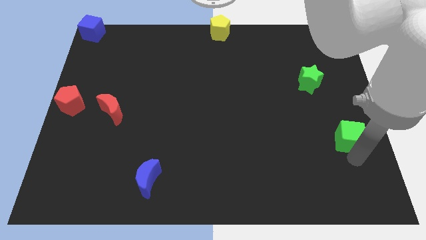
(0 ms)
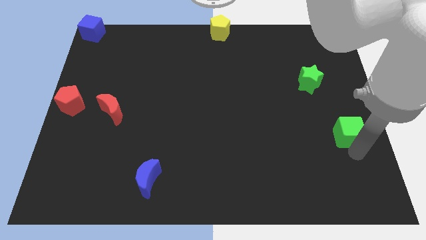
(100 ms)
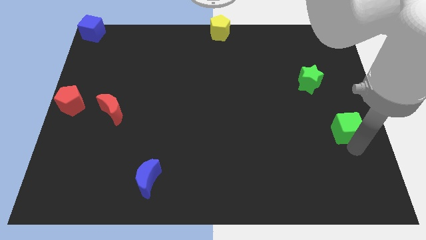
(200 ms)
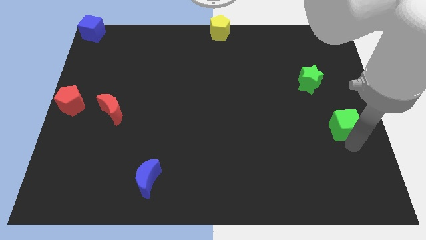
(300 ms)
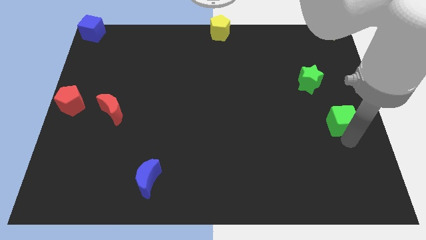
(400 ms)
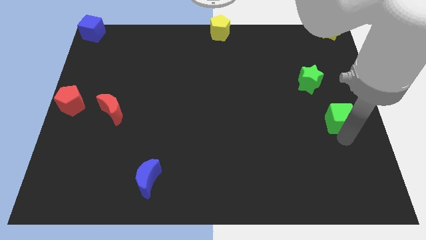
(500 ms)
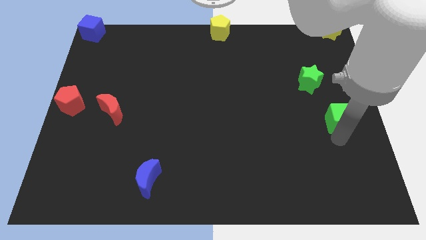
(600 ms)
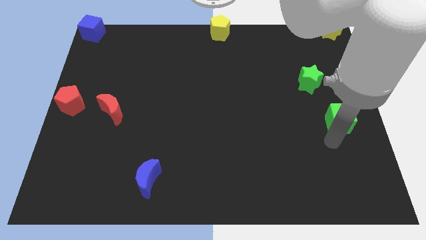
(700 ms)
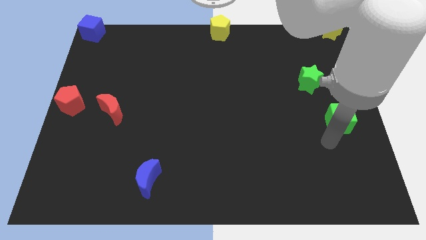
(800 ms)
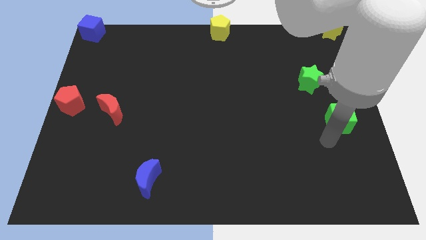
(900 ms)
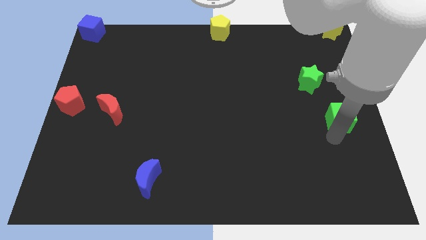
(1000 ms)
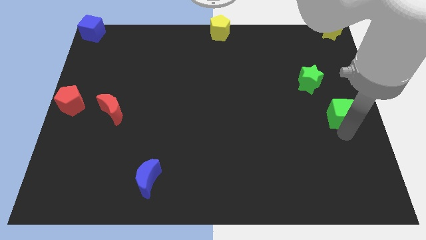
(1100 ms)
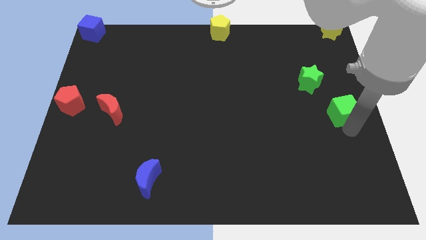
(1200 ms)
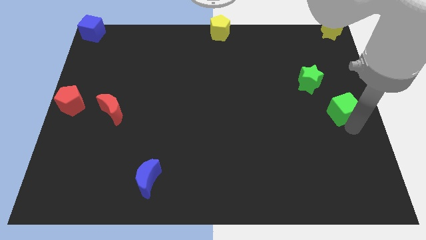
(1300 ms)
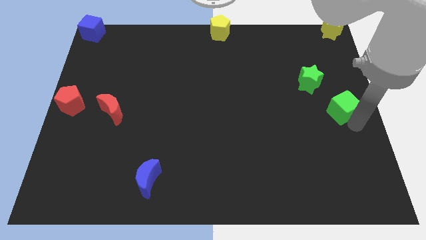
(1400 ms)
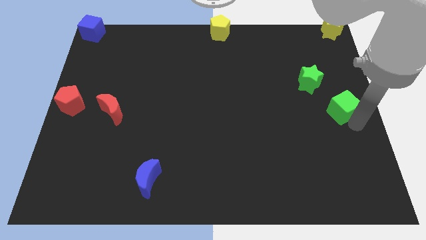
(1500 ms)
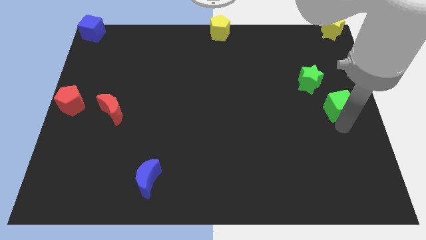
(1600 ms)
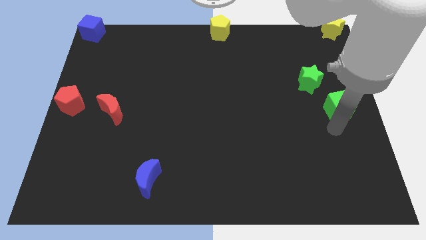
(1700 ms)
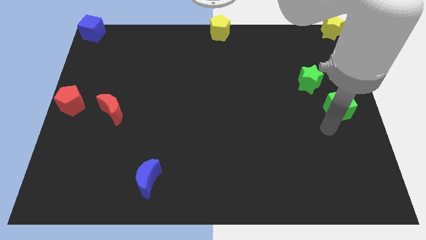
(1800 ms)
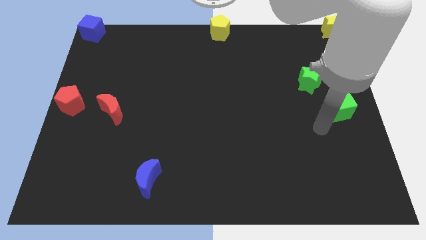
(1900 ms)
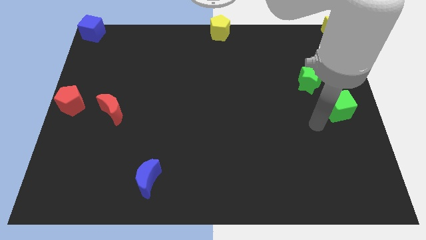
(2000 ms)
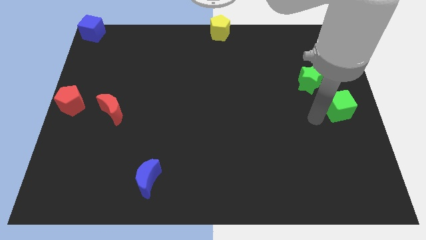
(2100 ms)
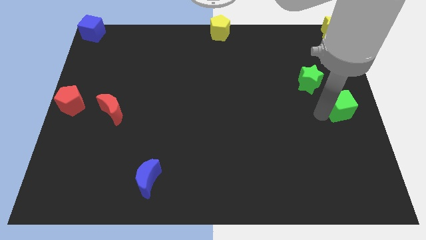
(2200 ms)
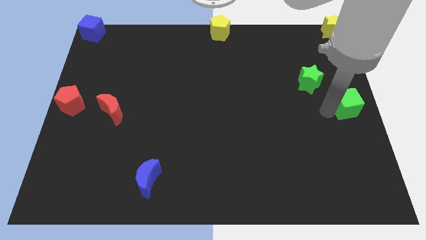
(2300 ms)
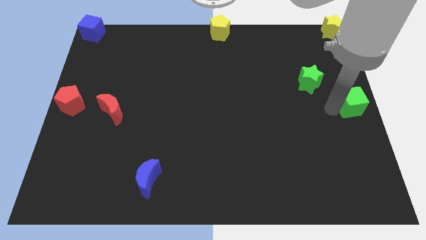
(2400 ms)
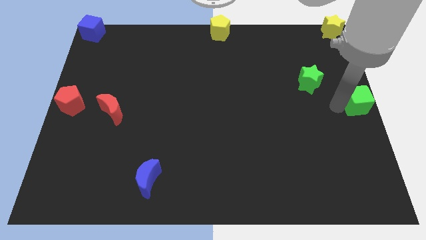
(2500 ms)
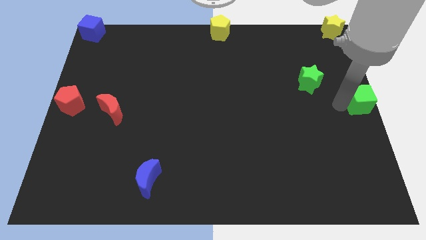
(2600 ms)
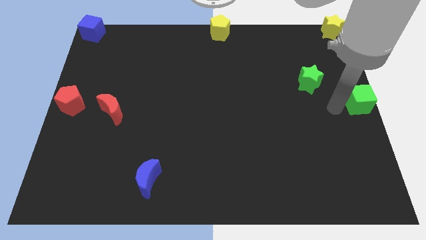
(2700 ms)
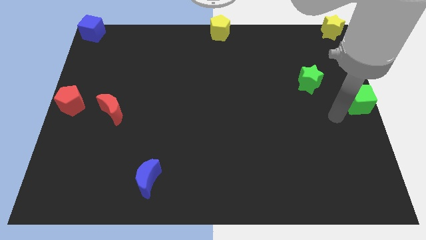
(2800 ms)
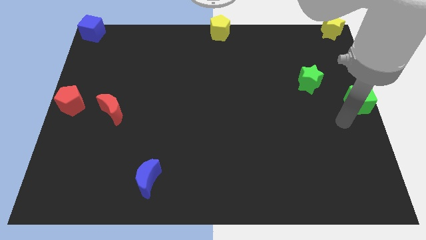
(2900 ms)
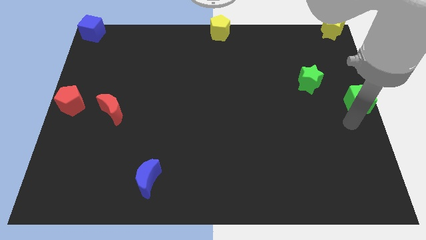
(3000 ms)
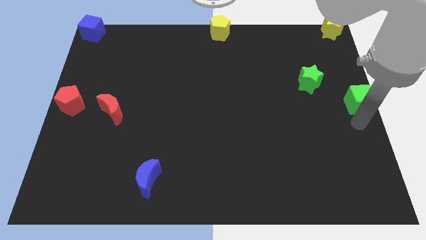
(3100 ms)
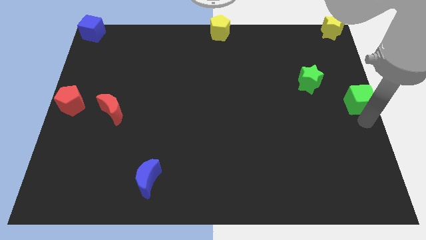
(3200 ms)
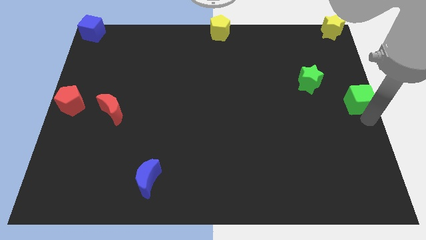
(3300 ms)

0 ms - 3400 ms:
push green cube towards middle right of the board

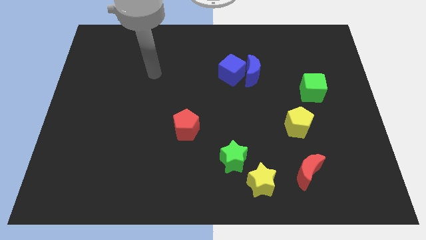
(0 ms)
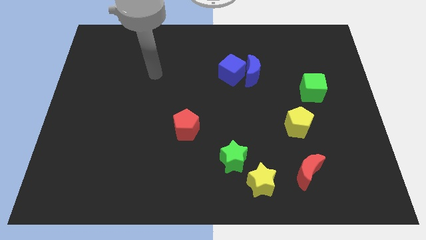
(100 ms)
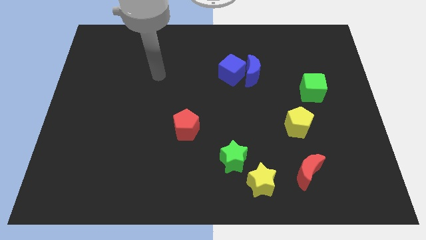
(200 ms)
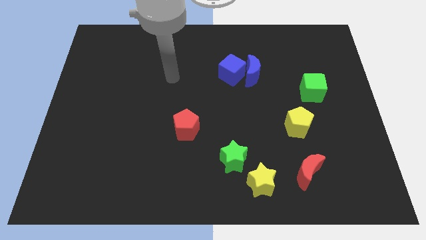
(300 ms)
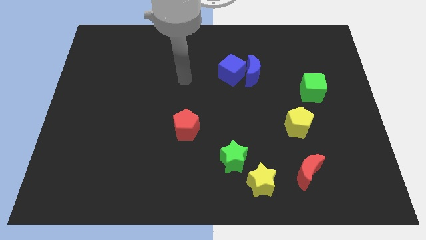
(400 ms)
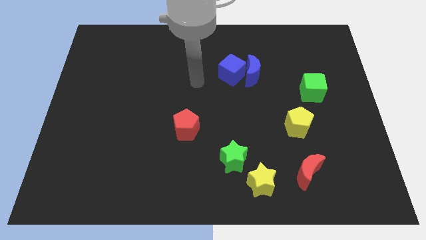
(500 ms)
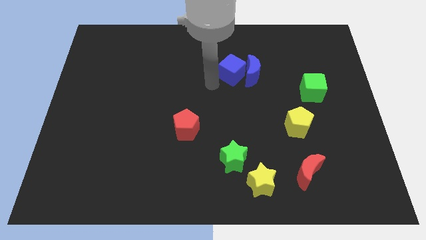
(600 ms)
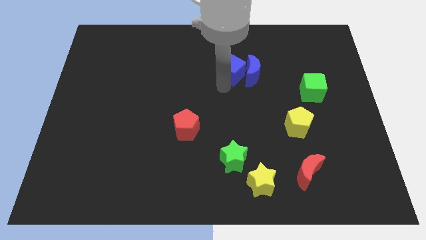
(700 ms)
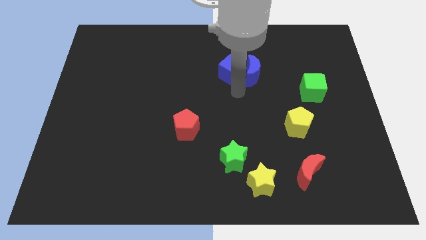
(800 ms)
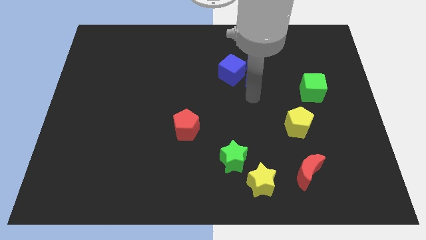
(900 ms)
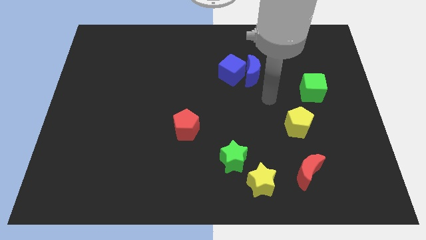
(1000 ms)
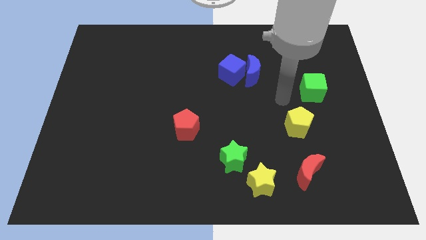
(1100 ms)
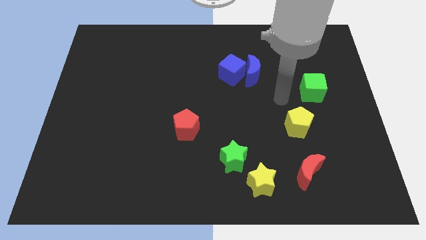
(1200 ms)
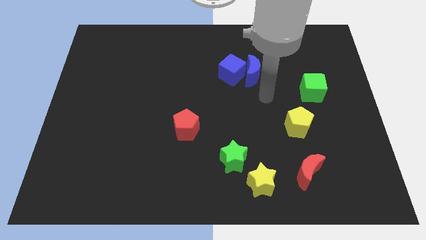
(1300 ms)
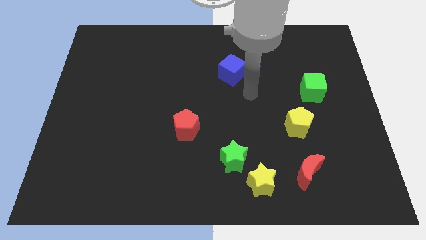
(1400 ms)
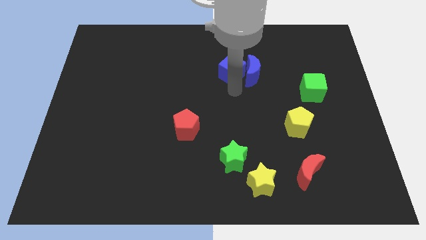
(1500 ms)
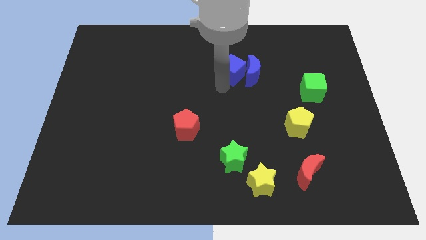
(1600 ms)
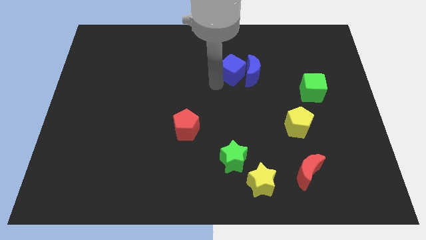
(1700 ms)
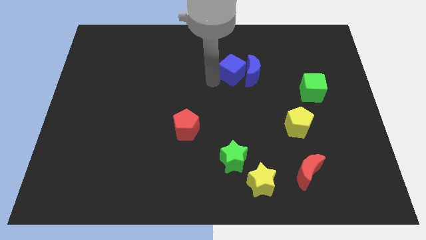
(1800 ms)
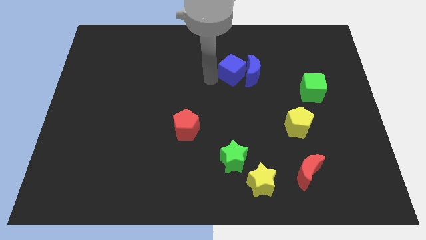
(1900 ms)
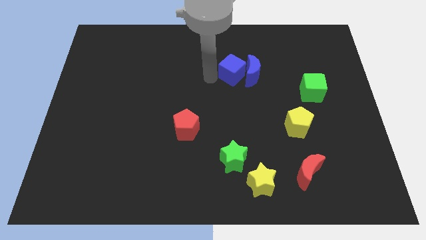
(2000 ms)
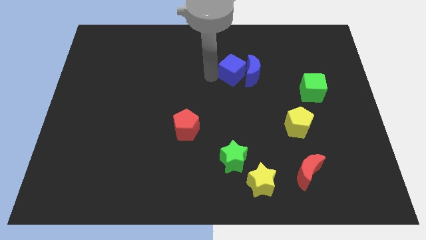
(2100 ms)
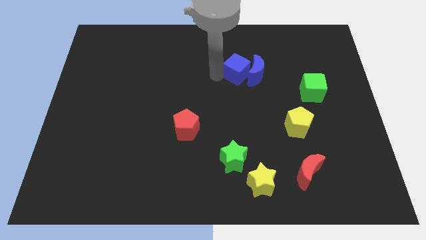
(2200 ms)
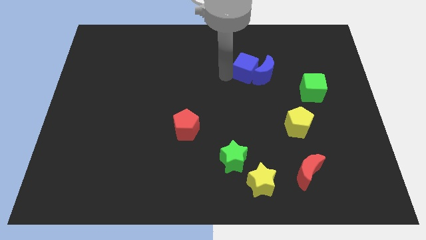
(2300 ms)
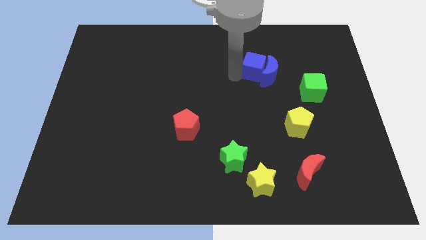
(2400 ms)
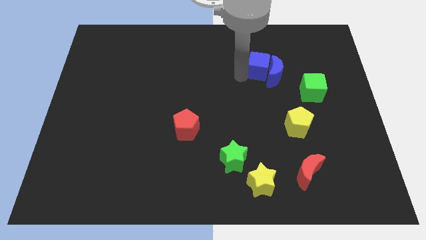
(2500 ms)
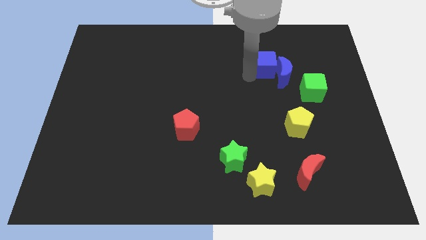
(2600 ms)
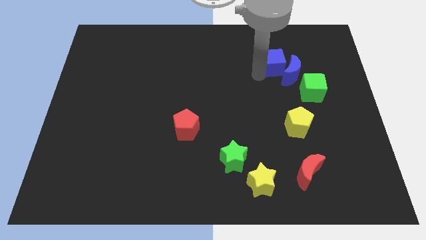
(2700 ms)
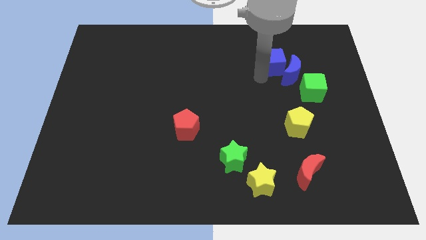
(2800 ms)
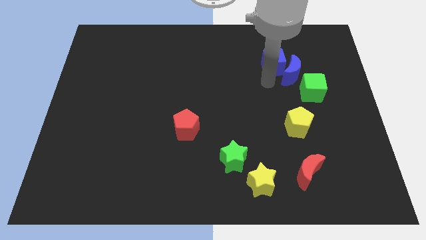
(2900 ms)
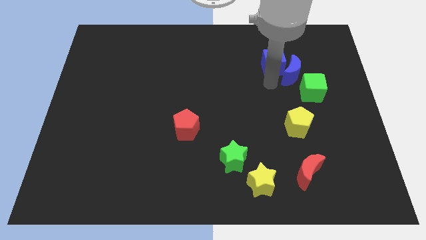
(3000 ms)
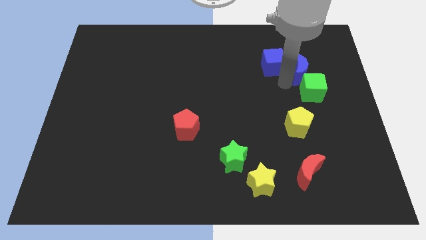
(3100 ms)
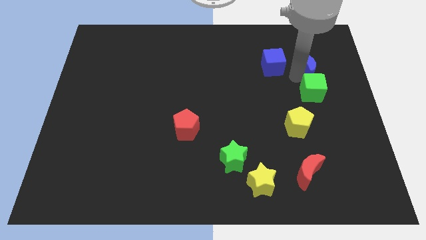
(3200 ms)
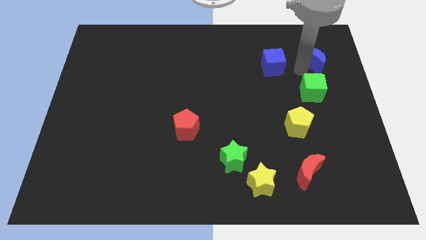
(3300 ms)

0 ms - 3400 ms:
put the blue moon on the top side of the green cube

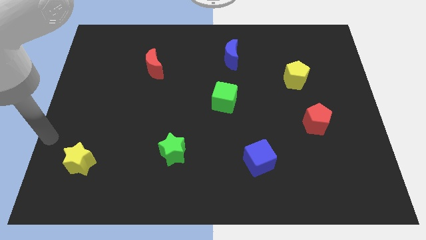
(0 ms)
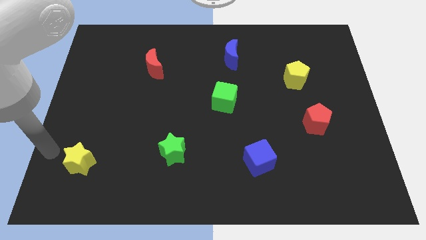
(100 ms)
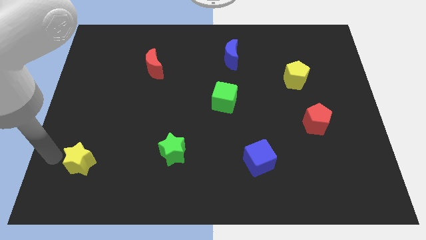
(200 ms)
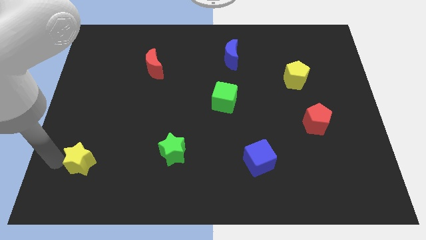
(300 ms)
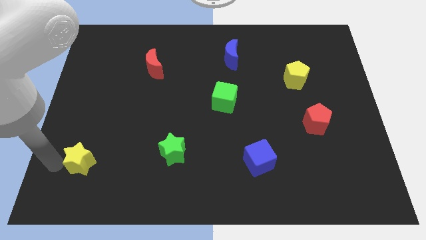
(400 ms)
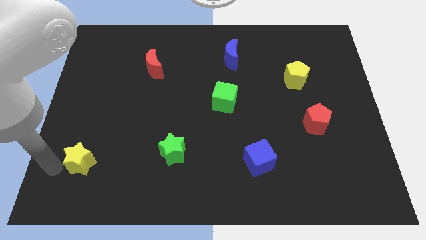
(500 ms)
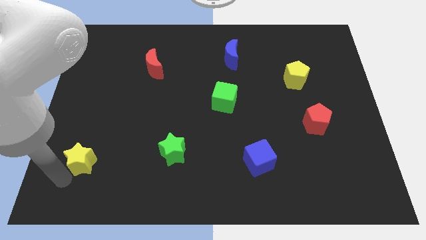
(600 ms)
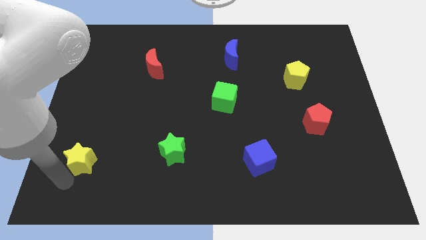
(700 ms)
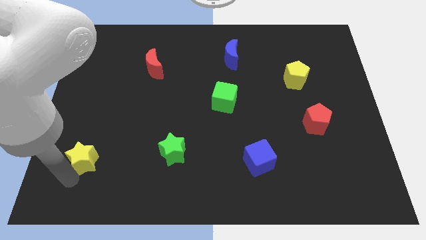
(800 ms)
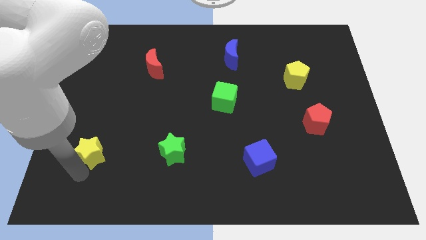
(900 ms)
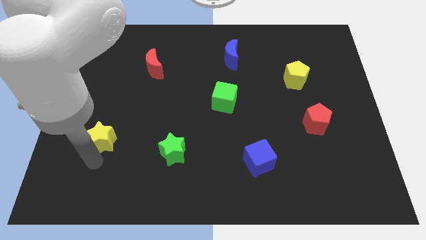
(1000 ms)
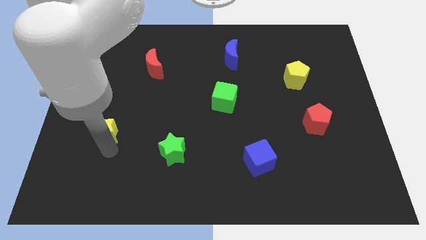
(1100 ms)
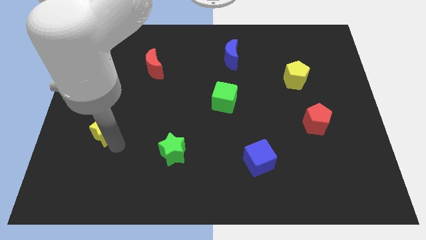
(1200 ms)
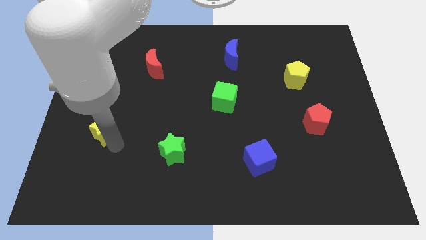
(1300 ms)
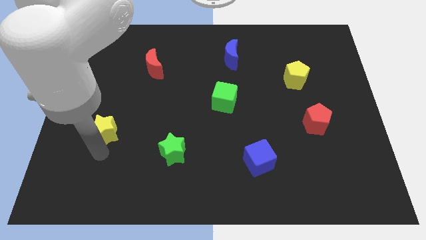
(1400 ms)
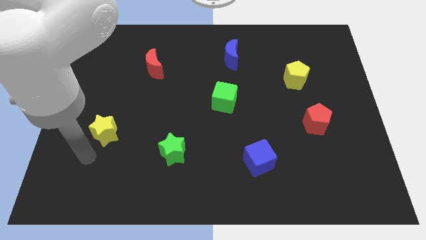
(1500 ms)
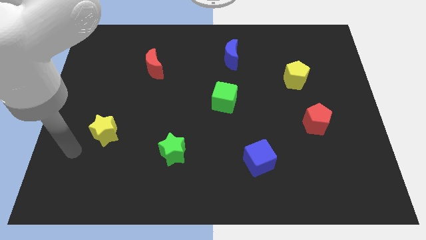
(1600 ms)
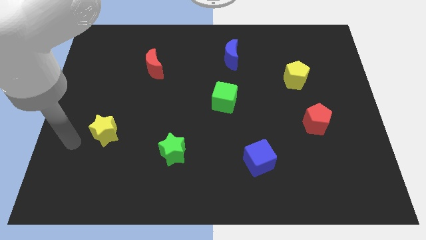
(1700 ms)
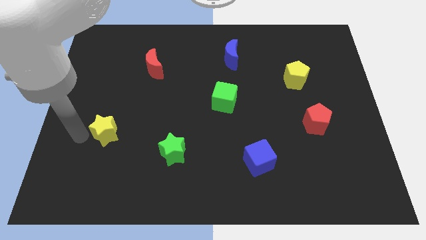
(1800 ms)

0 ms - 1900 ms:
move the yellow star upwards of the board

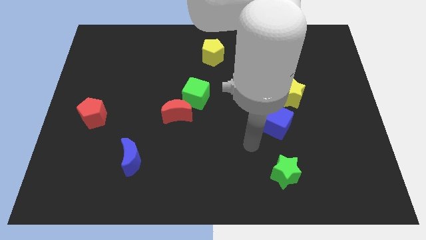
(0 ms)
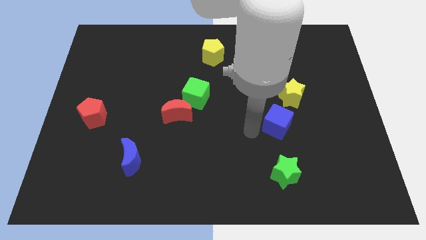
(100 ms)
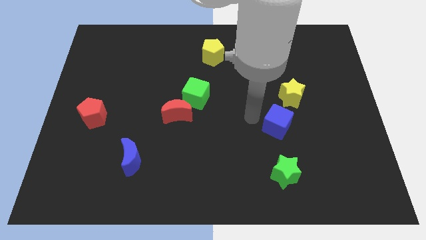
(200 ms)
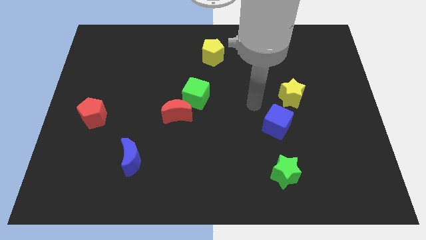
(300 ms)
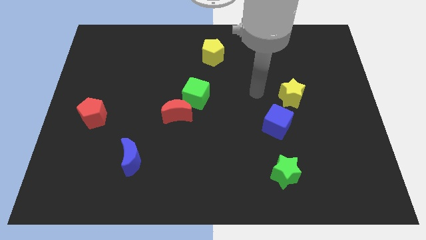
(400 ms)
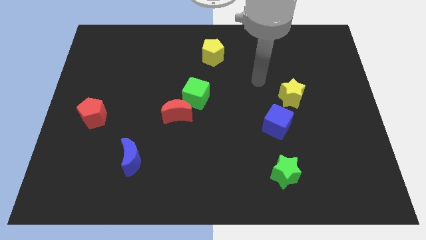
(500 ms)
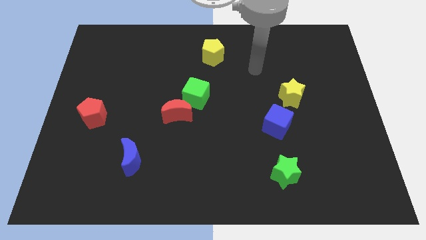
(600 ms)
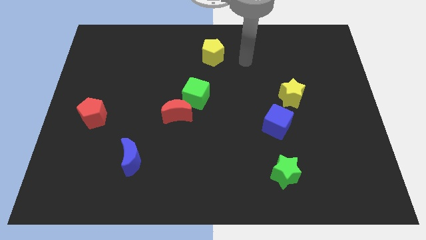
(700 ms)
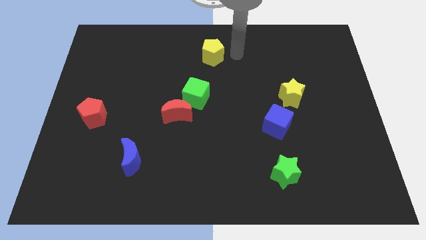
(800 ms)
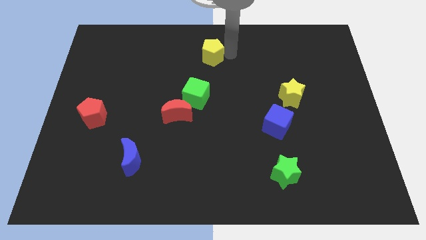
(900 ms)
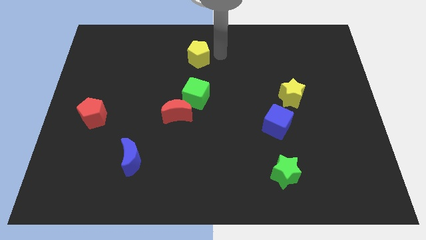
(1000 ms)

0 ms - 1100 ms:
move your arm right to the yellow pentagon
